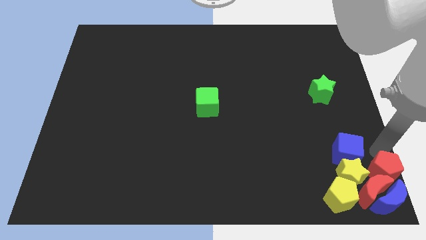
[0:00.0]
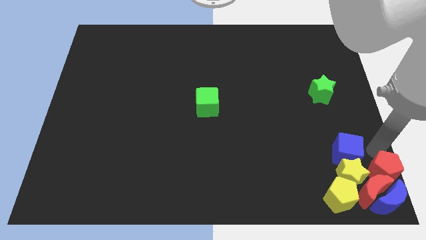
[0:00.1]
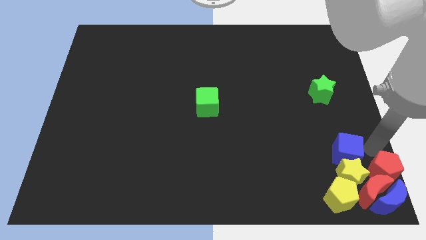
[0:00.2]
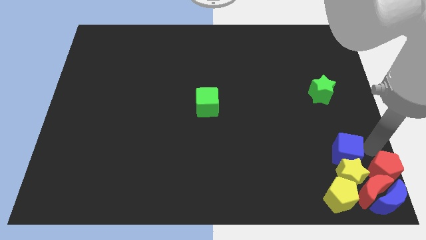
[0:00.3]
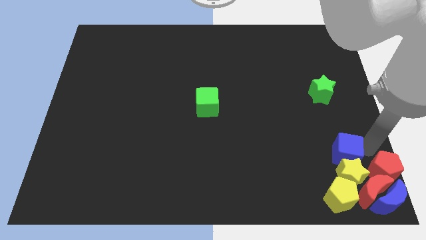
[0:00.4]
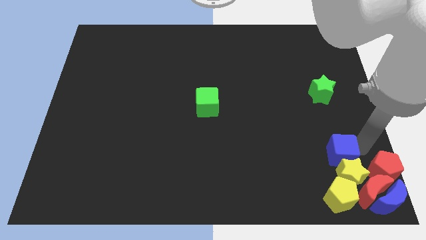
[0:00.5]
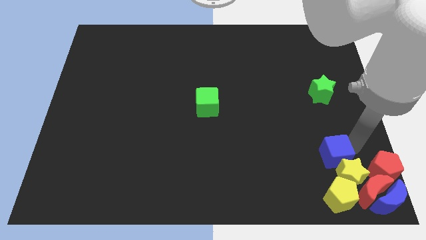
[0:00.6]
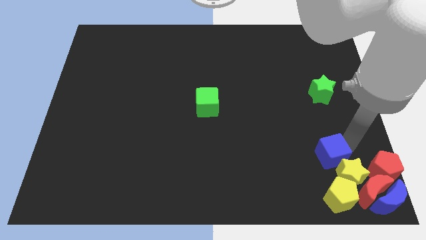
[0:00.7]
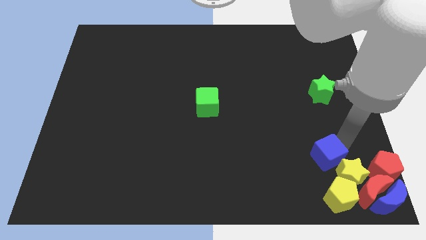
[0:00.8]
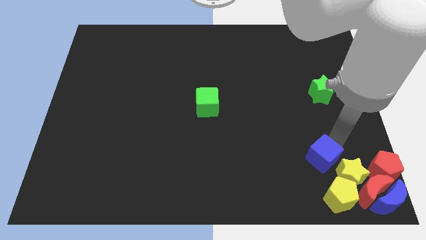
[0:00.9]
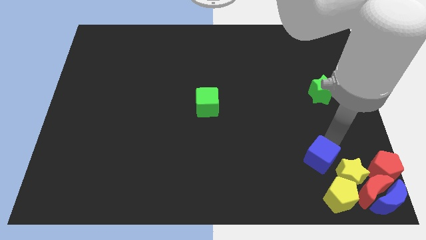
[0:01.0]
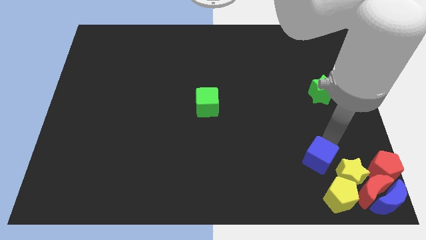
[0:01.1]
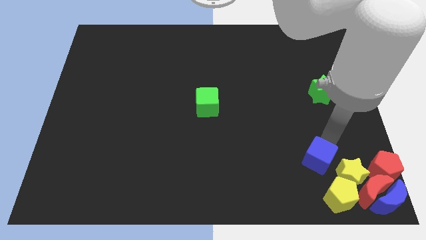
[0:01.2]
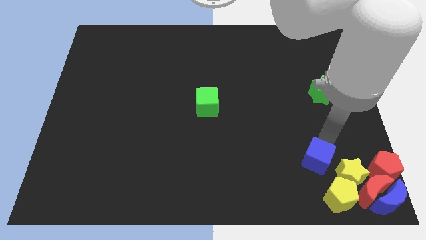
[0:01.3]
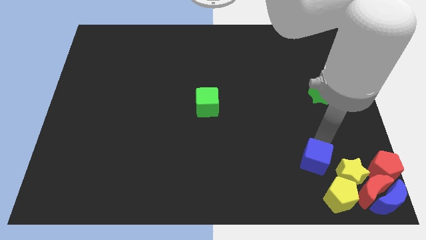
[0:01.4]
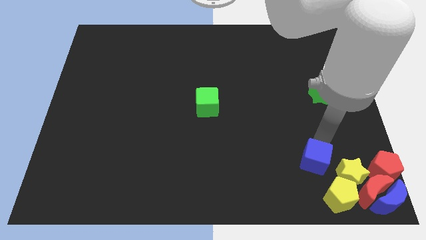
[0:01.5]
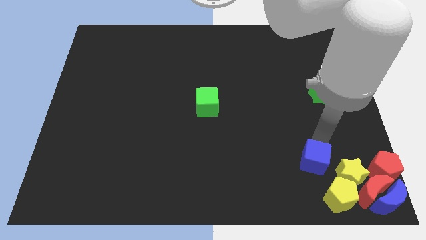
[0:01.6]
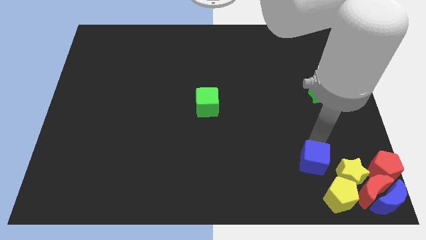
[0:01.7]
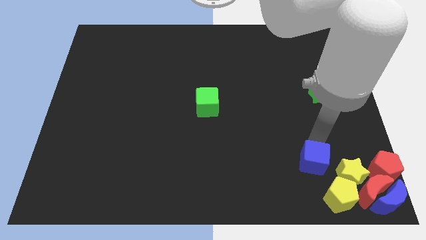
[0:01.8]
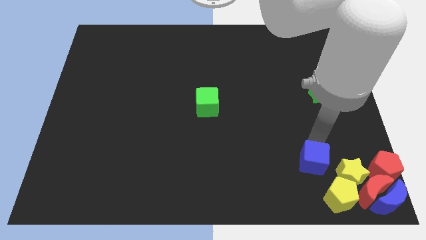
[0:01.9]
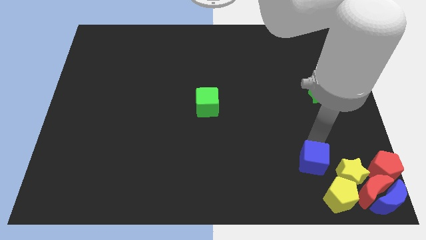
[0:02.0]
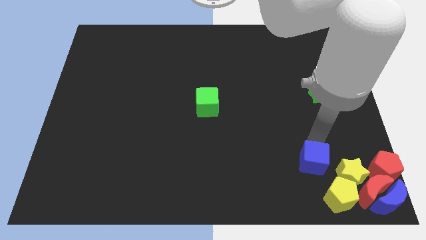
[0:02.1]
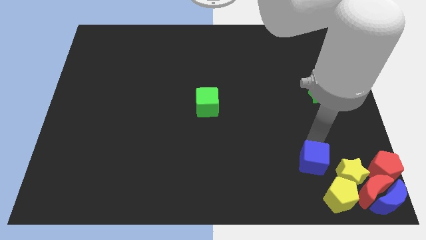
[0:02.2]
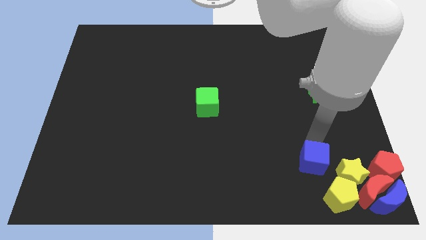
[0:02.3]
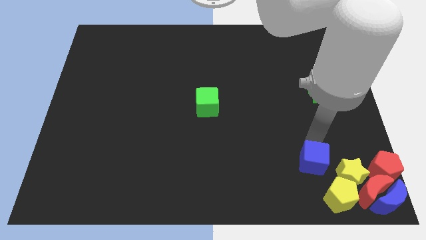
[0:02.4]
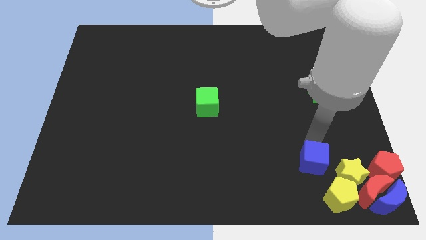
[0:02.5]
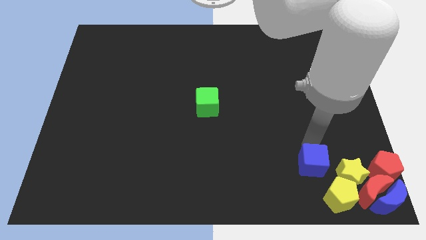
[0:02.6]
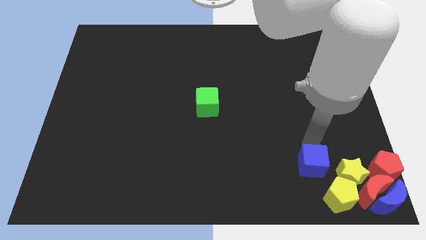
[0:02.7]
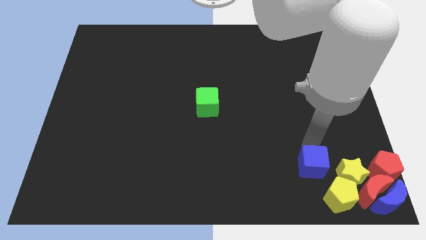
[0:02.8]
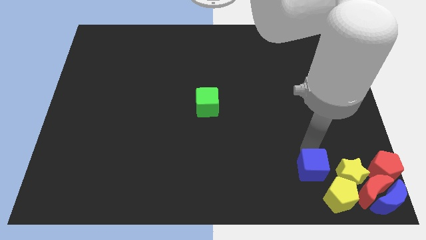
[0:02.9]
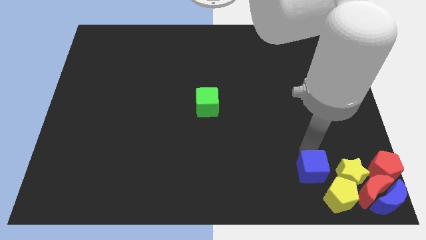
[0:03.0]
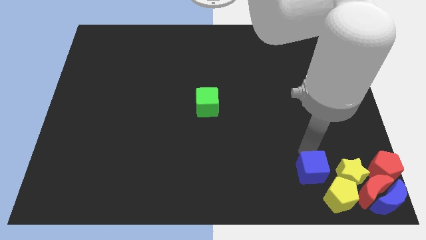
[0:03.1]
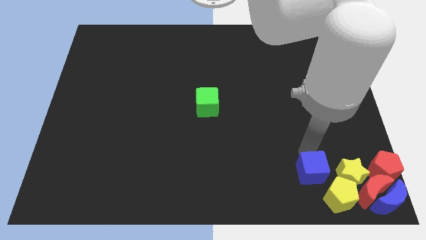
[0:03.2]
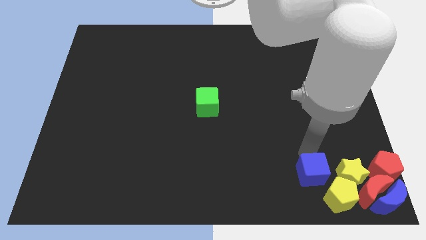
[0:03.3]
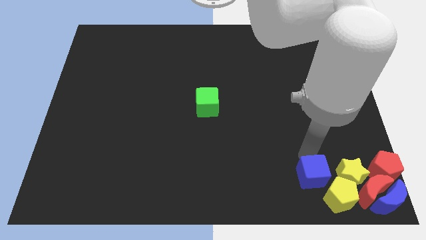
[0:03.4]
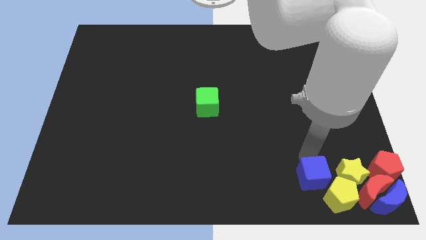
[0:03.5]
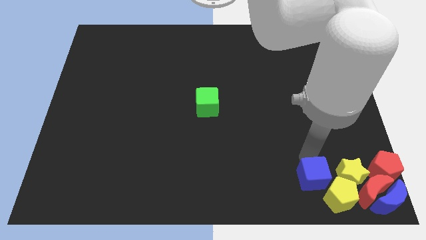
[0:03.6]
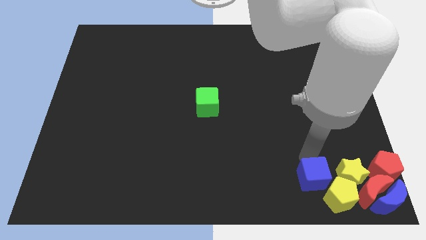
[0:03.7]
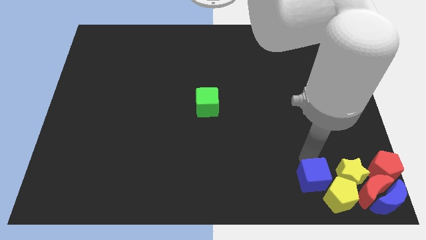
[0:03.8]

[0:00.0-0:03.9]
push the blue cube to the left of yellow pentagon

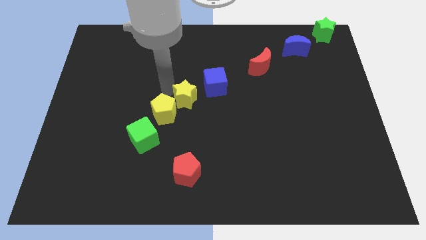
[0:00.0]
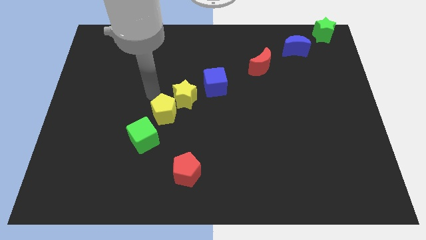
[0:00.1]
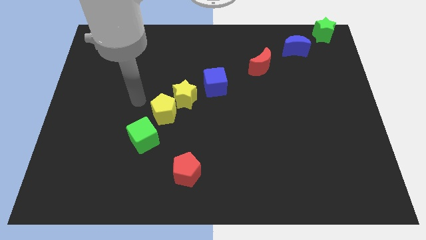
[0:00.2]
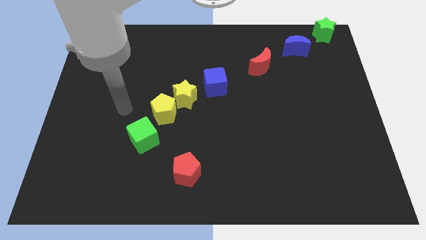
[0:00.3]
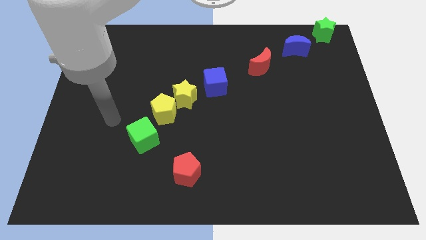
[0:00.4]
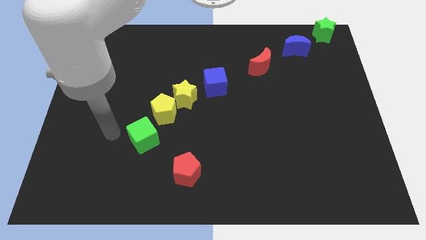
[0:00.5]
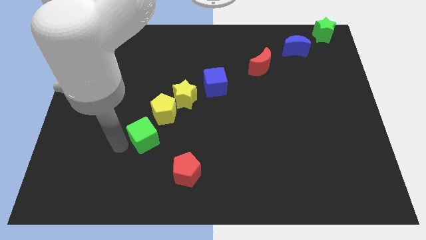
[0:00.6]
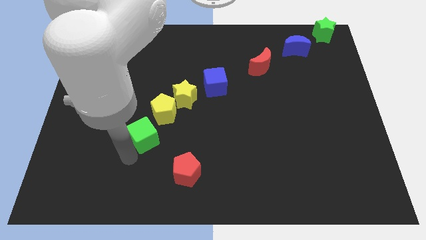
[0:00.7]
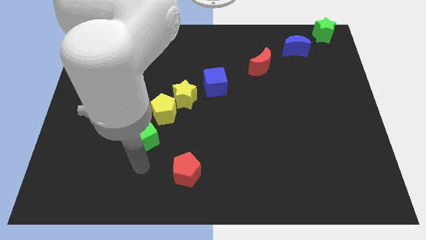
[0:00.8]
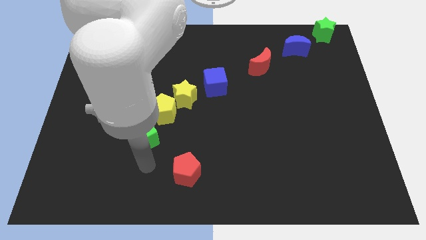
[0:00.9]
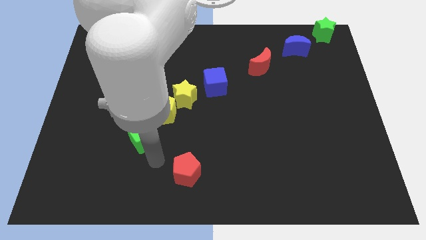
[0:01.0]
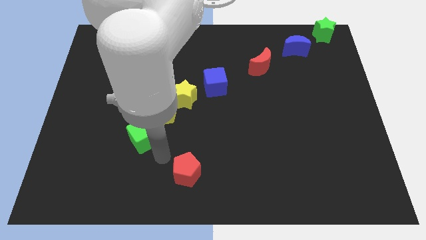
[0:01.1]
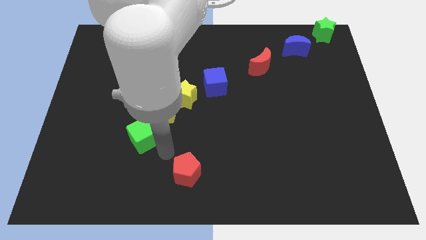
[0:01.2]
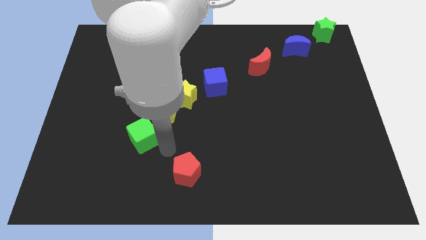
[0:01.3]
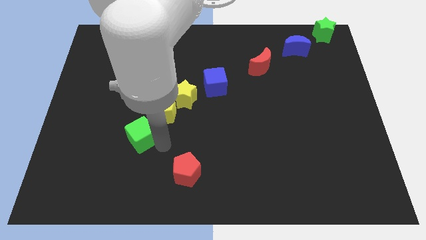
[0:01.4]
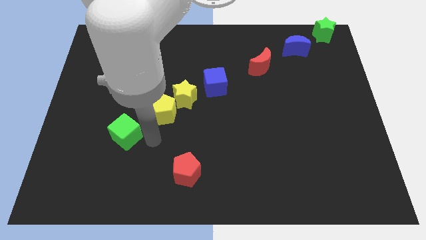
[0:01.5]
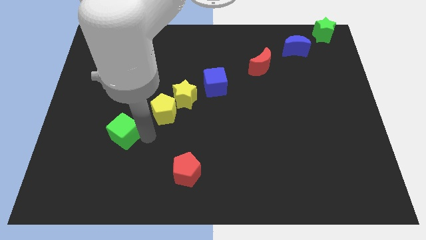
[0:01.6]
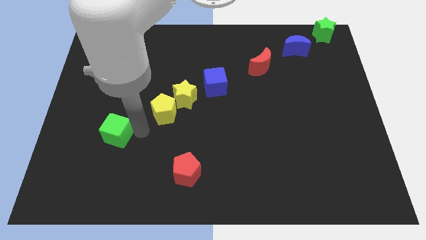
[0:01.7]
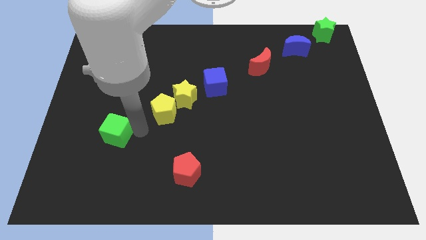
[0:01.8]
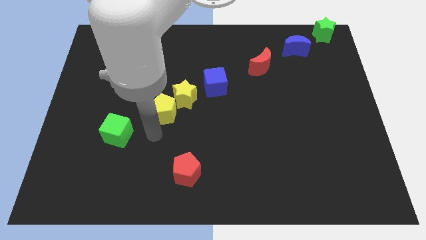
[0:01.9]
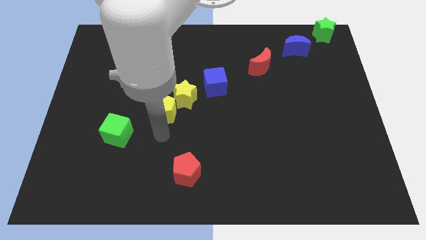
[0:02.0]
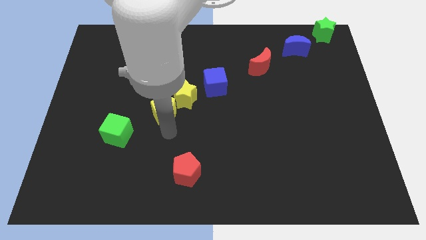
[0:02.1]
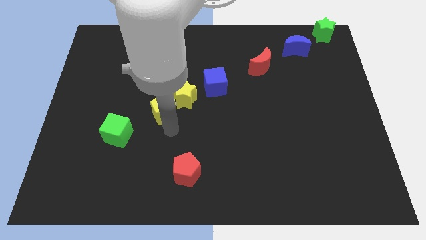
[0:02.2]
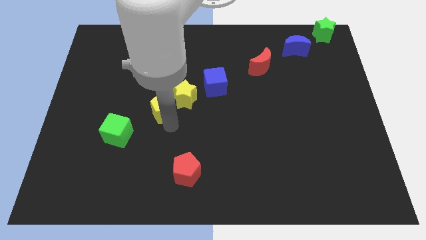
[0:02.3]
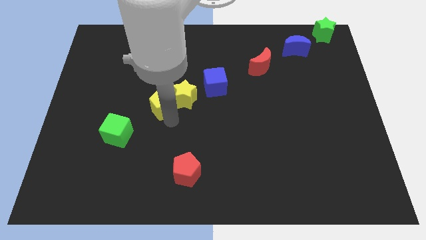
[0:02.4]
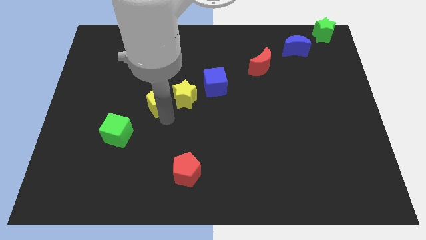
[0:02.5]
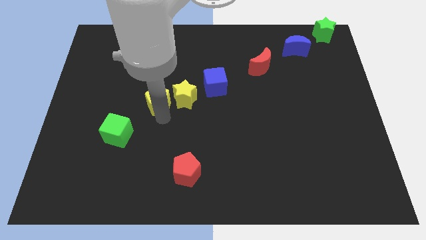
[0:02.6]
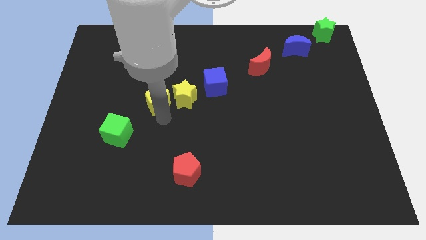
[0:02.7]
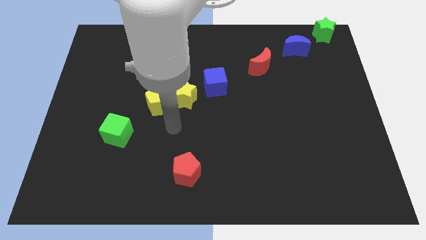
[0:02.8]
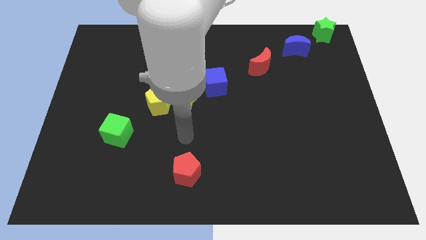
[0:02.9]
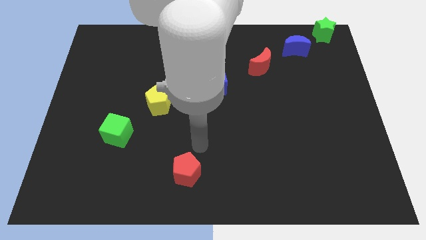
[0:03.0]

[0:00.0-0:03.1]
slightly push the green cube and yellow star towards the left

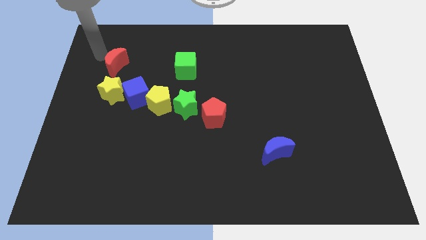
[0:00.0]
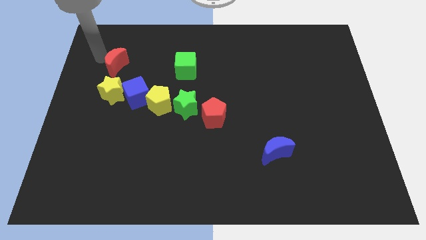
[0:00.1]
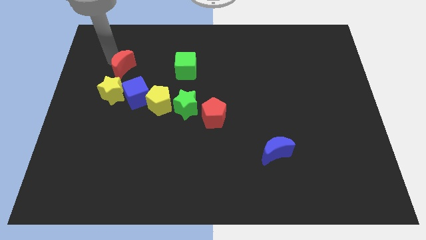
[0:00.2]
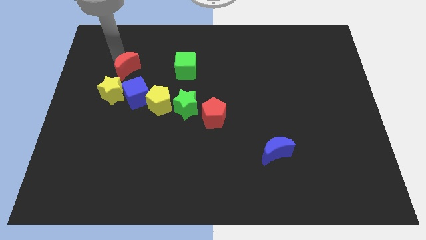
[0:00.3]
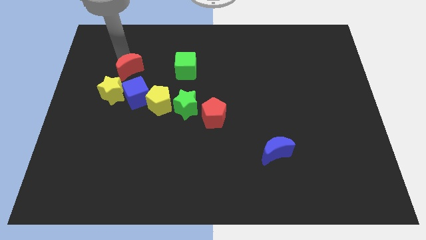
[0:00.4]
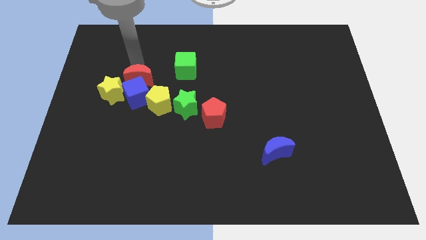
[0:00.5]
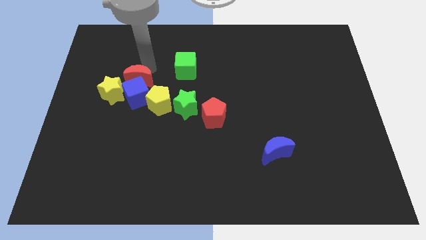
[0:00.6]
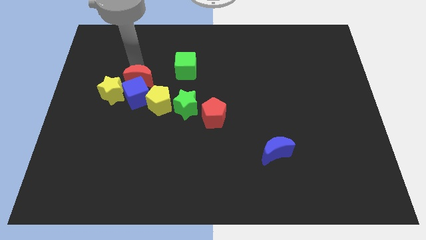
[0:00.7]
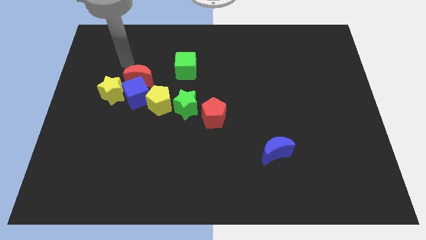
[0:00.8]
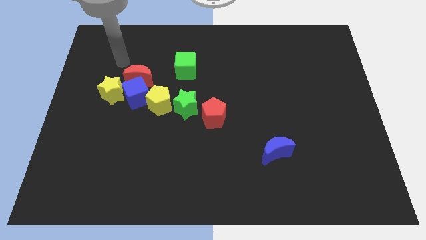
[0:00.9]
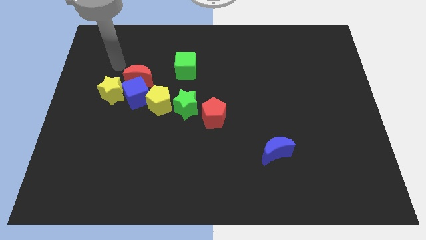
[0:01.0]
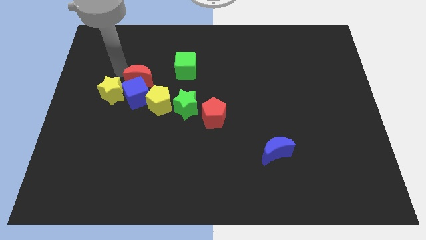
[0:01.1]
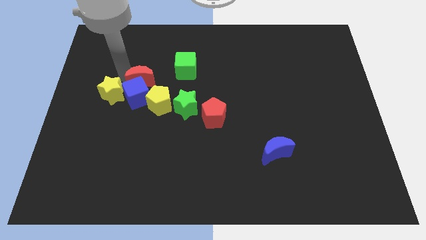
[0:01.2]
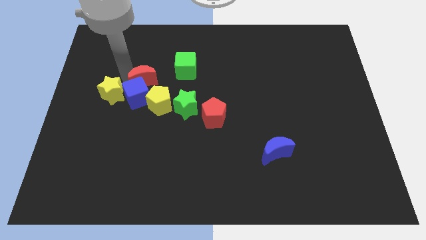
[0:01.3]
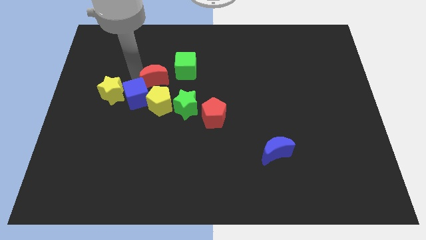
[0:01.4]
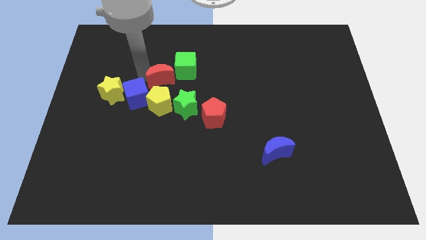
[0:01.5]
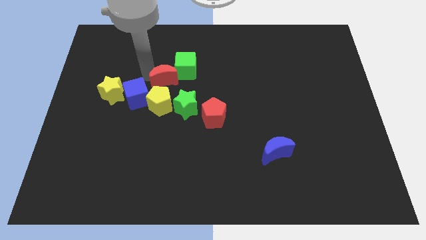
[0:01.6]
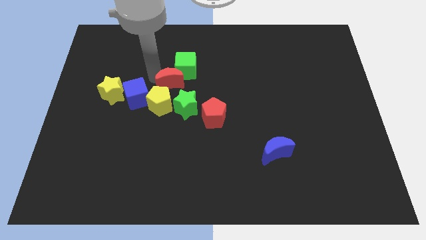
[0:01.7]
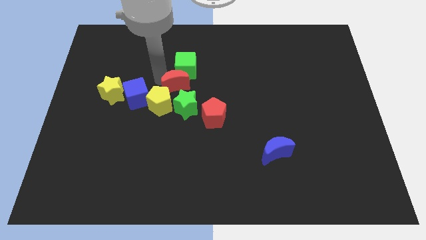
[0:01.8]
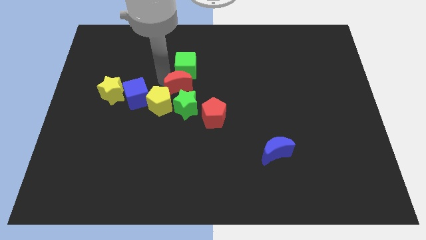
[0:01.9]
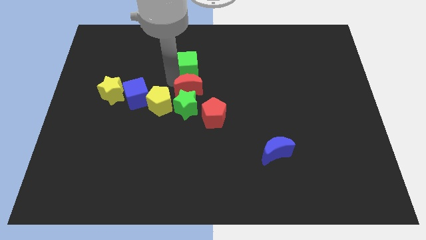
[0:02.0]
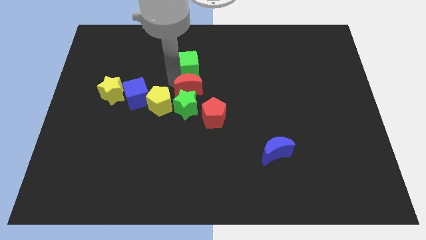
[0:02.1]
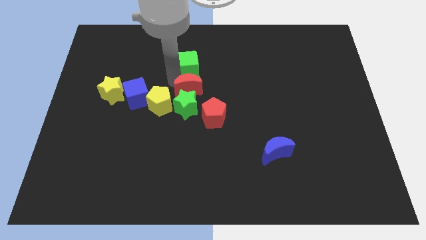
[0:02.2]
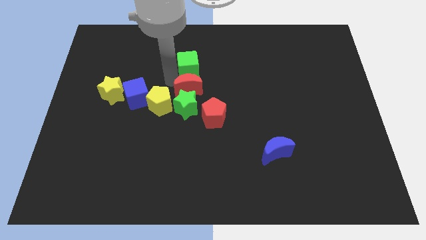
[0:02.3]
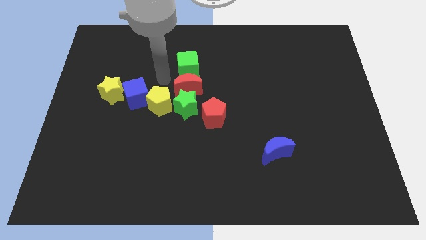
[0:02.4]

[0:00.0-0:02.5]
place the red crescent above to the green star
